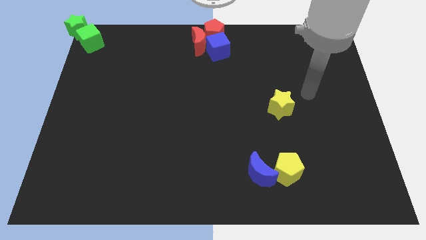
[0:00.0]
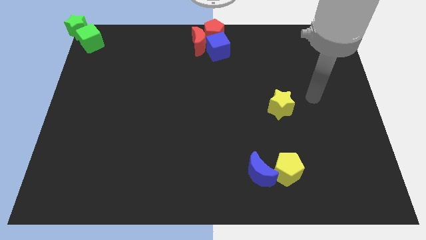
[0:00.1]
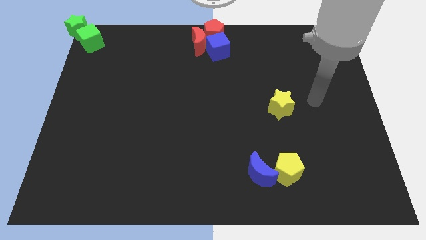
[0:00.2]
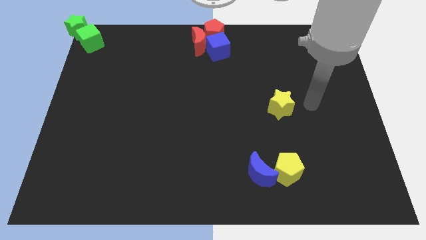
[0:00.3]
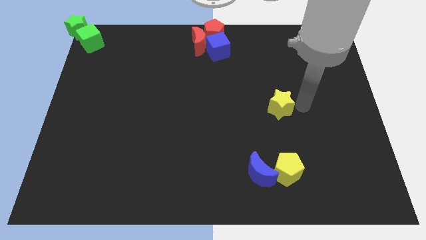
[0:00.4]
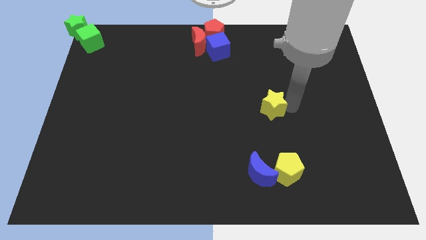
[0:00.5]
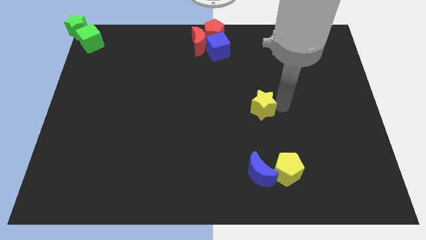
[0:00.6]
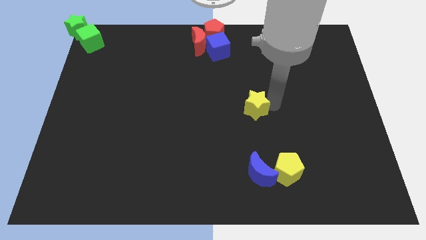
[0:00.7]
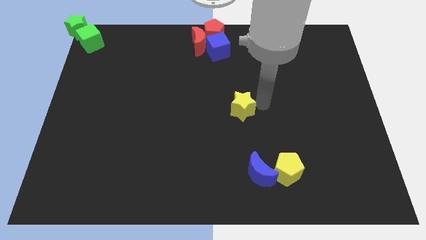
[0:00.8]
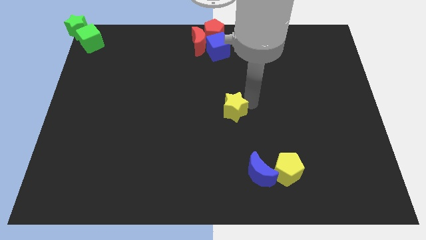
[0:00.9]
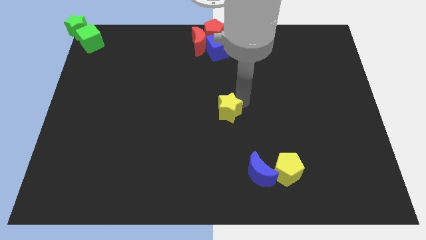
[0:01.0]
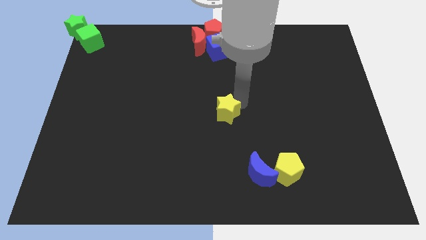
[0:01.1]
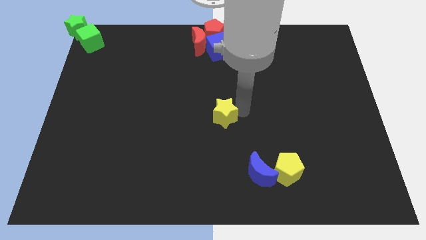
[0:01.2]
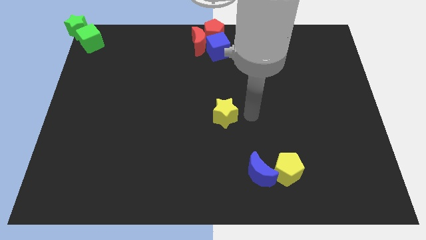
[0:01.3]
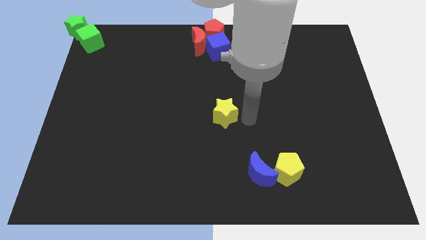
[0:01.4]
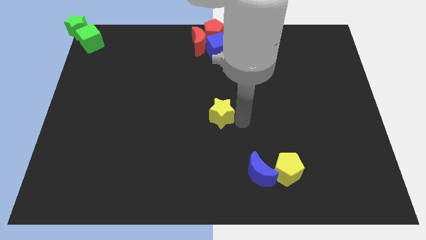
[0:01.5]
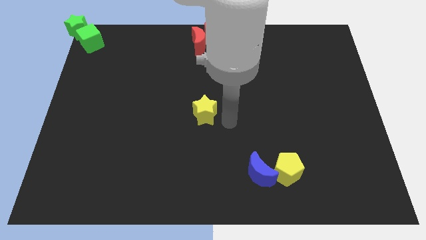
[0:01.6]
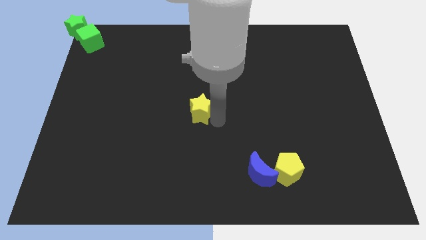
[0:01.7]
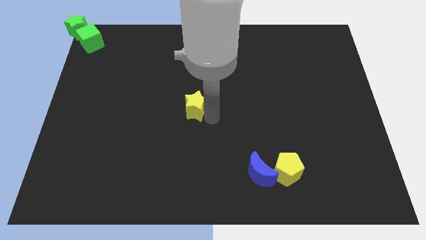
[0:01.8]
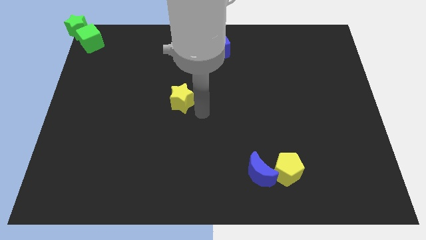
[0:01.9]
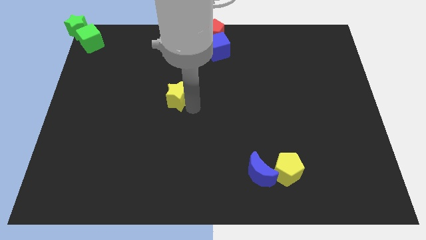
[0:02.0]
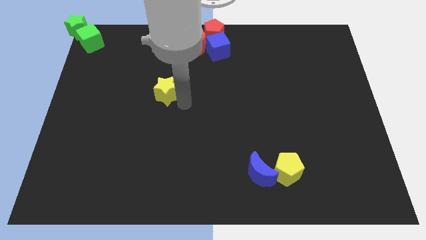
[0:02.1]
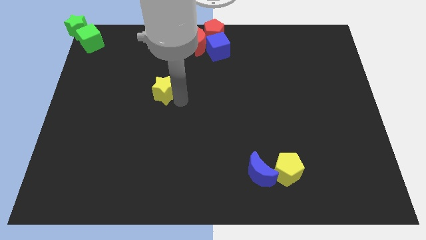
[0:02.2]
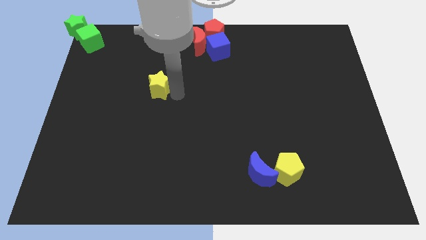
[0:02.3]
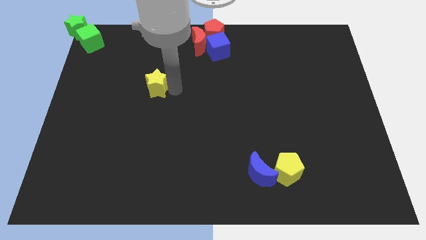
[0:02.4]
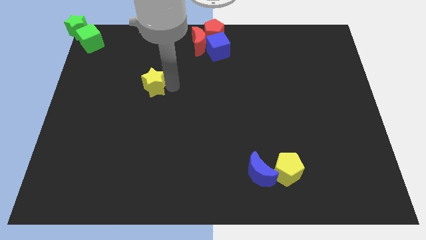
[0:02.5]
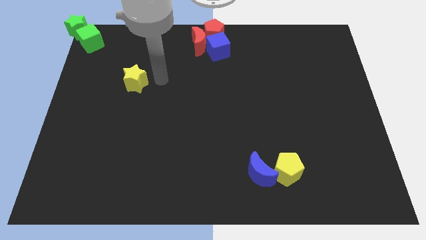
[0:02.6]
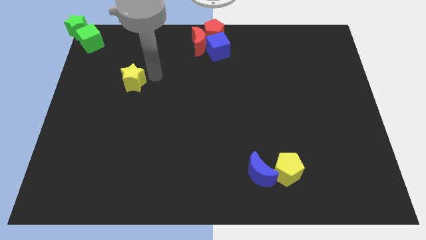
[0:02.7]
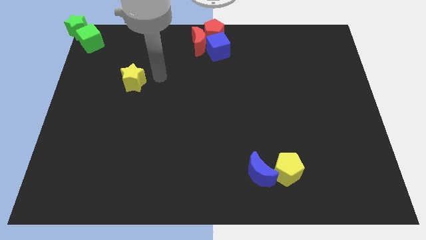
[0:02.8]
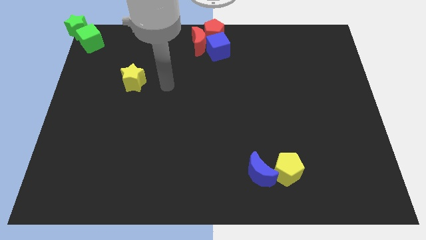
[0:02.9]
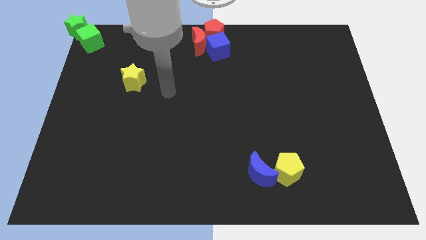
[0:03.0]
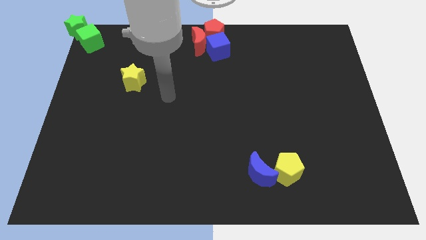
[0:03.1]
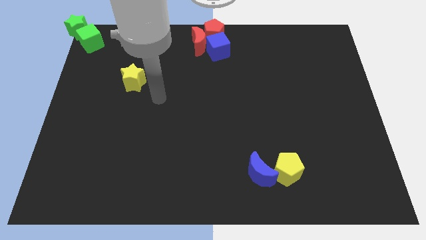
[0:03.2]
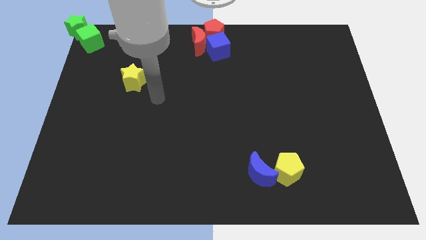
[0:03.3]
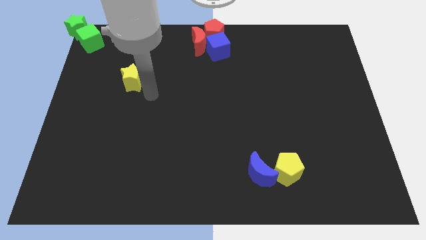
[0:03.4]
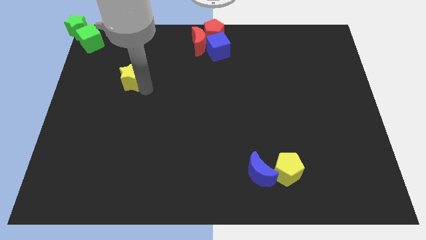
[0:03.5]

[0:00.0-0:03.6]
push the yellow star towards the group of green blocks

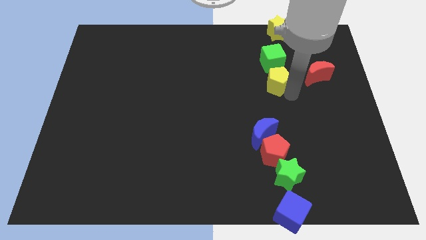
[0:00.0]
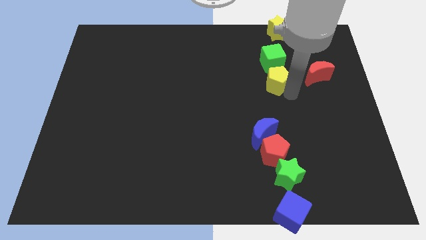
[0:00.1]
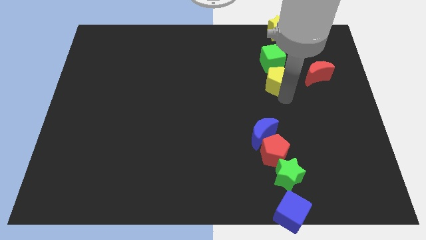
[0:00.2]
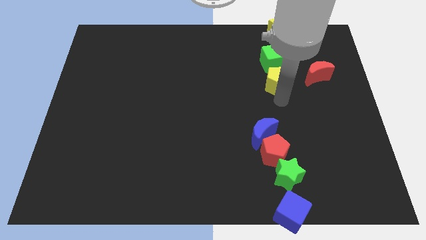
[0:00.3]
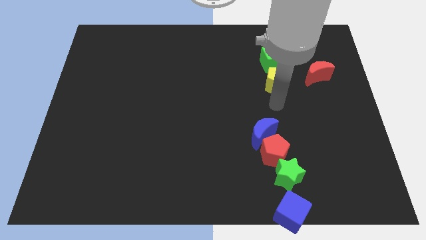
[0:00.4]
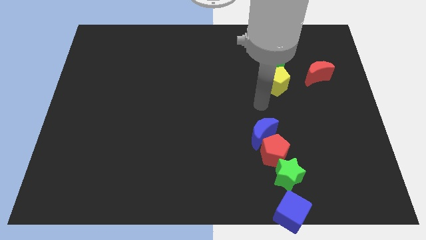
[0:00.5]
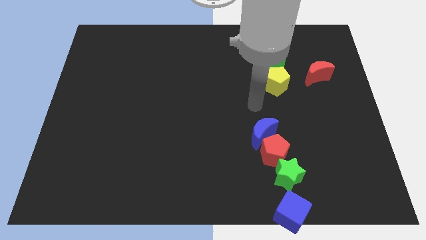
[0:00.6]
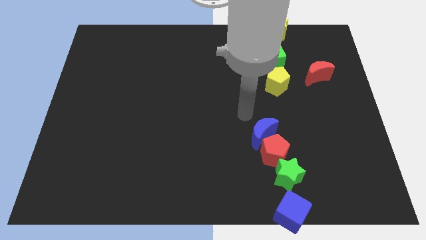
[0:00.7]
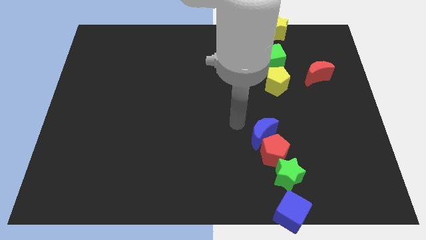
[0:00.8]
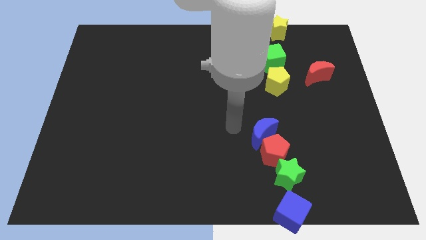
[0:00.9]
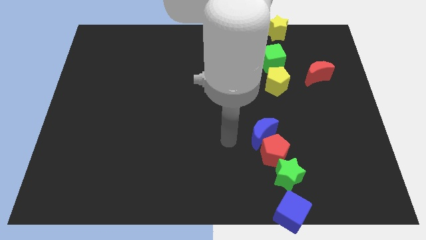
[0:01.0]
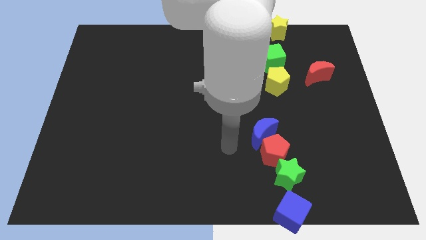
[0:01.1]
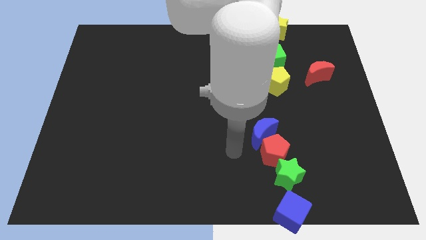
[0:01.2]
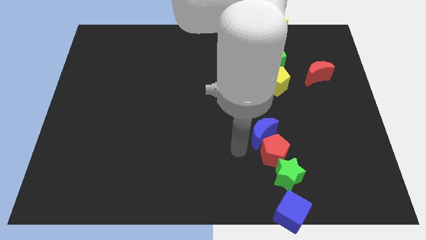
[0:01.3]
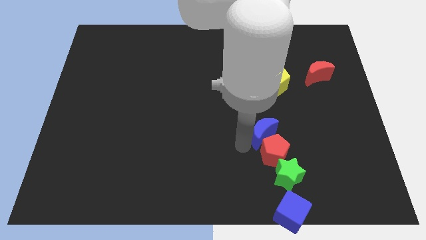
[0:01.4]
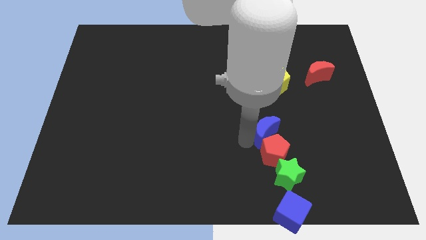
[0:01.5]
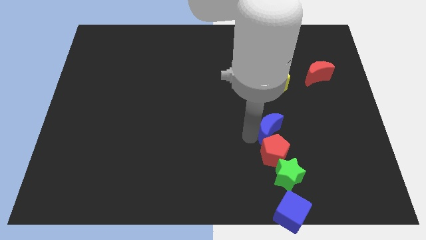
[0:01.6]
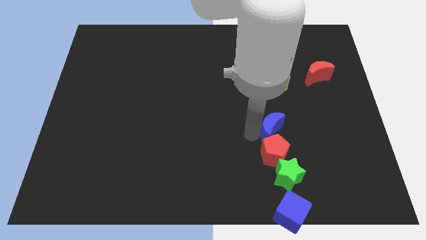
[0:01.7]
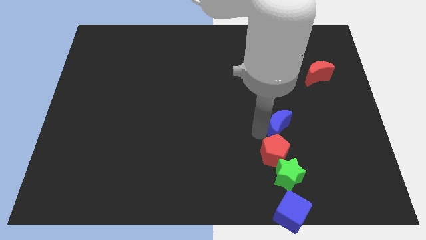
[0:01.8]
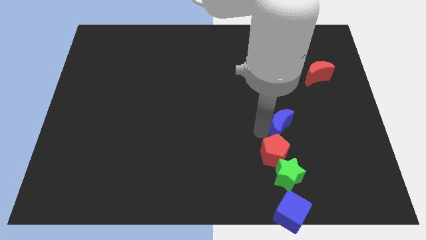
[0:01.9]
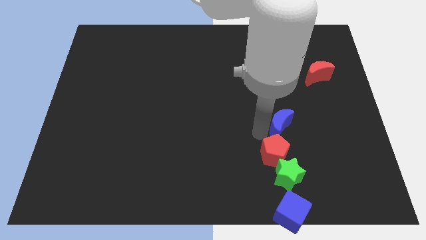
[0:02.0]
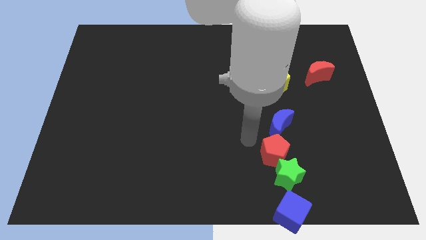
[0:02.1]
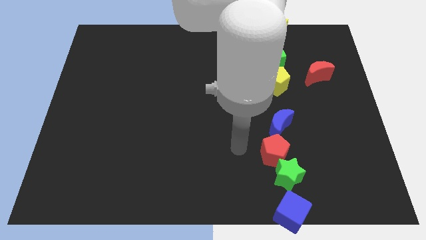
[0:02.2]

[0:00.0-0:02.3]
place the blue crescent under the yellow pentagon

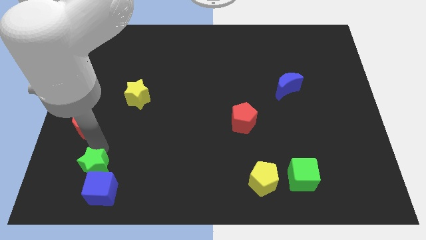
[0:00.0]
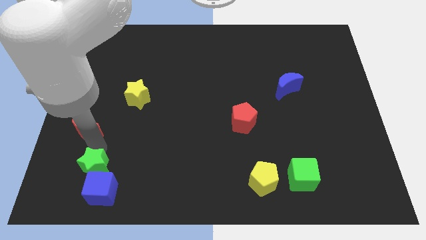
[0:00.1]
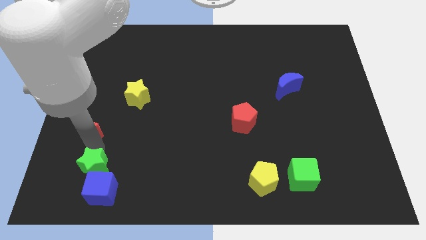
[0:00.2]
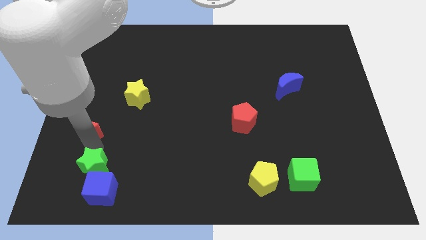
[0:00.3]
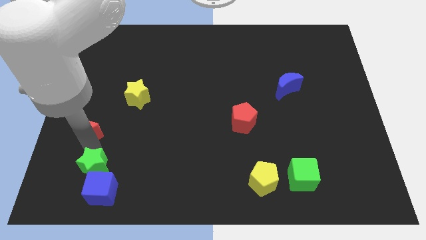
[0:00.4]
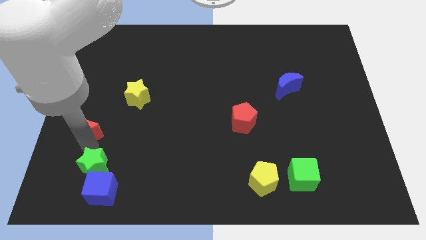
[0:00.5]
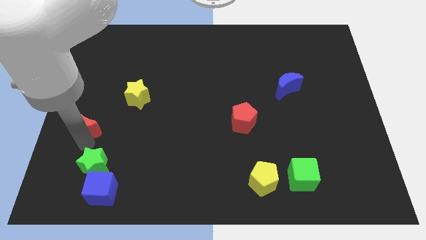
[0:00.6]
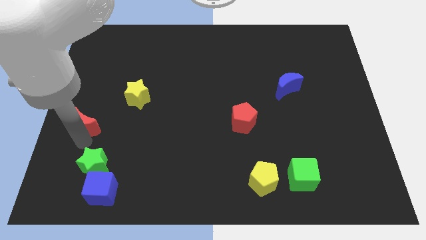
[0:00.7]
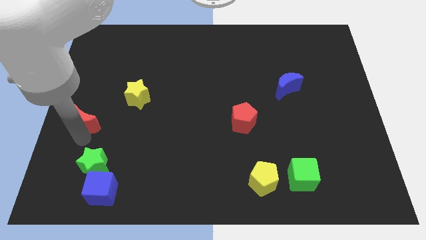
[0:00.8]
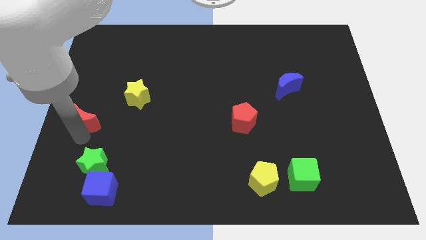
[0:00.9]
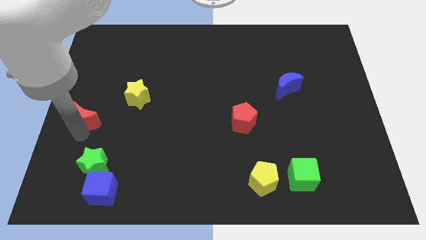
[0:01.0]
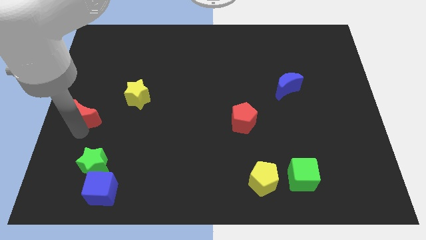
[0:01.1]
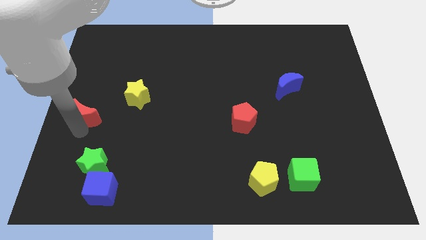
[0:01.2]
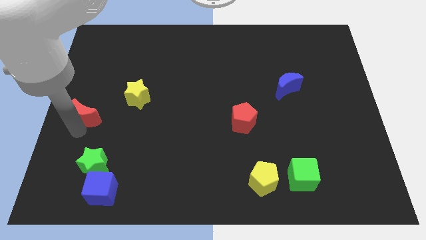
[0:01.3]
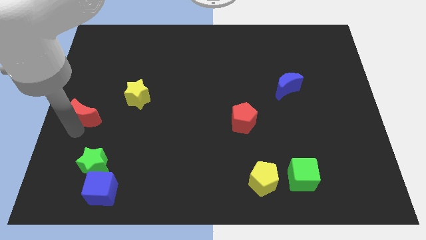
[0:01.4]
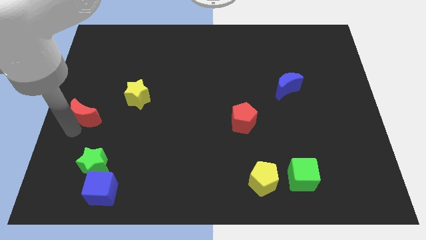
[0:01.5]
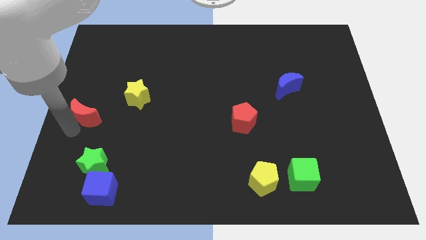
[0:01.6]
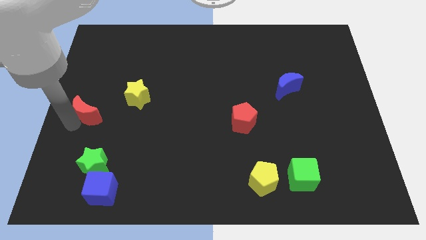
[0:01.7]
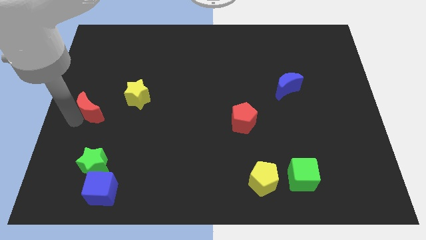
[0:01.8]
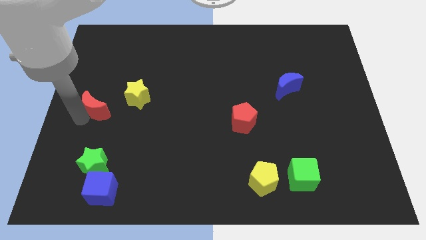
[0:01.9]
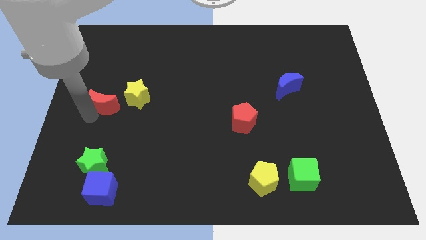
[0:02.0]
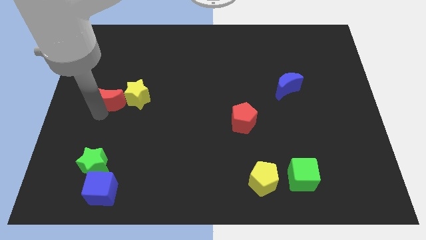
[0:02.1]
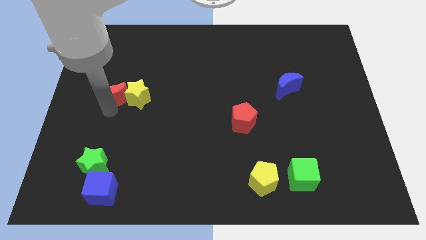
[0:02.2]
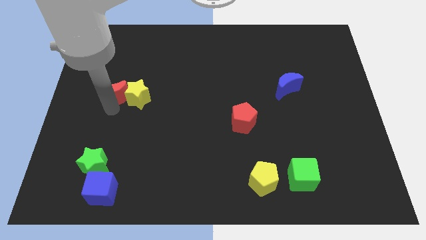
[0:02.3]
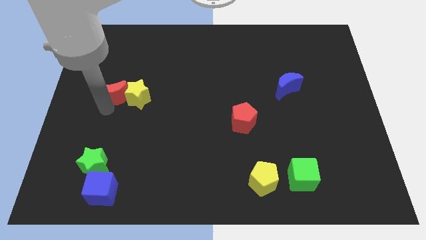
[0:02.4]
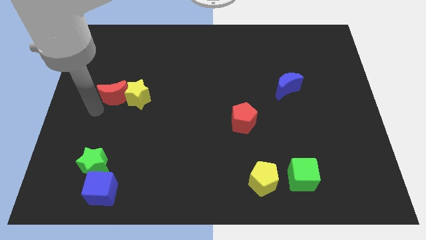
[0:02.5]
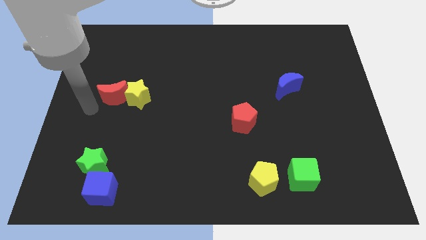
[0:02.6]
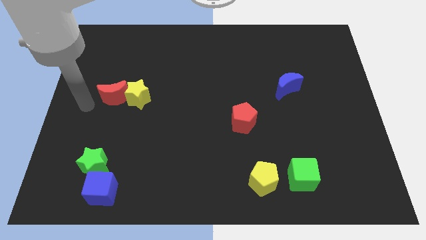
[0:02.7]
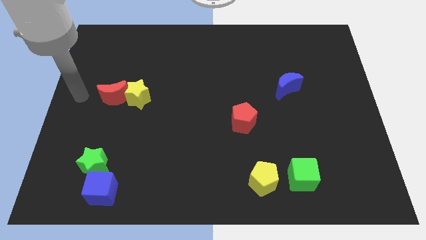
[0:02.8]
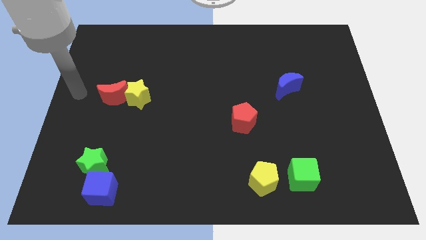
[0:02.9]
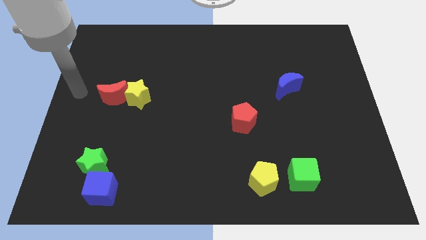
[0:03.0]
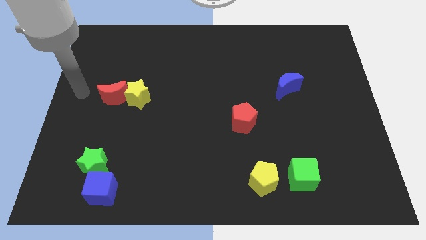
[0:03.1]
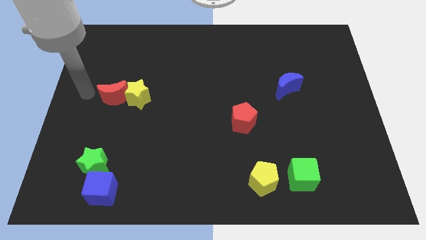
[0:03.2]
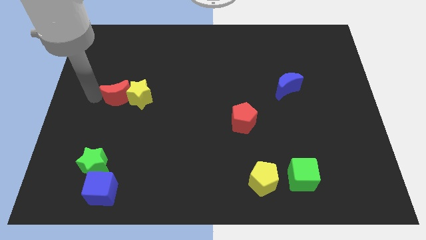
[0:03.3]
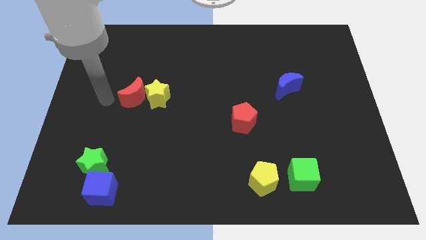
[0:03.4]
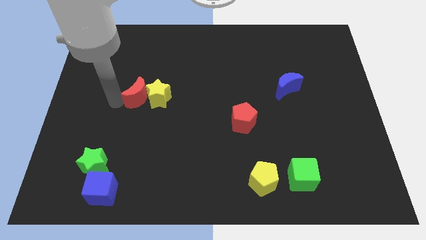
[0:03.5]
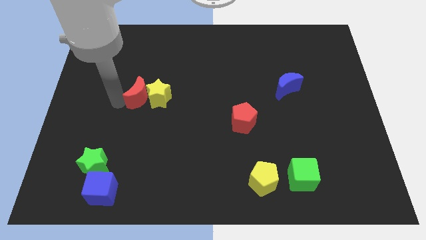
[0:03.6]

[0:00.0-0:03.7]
push the red crescent into the yellow star
